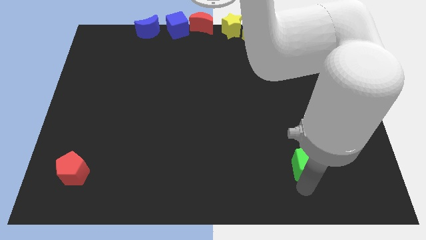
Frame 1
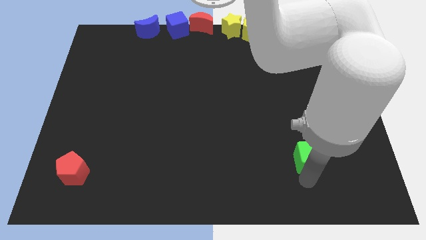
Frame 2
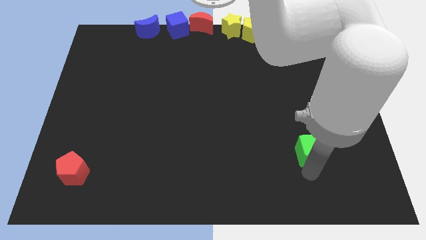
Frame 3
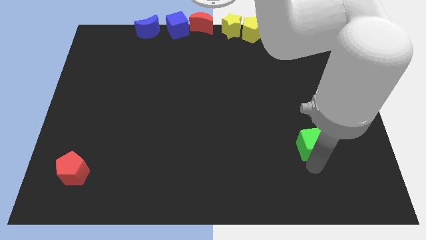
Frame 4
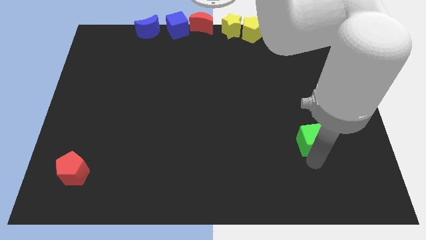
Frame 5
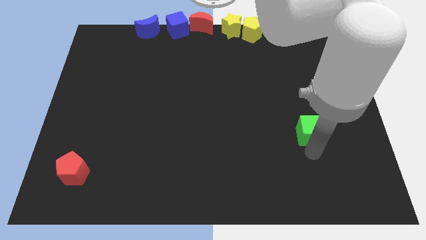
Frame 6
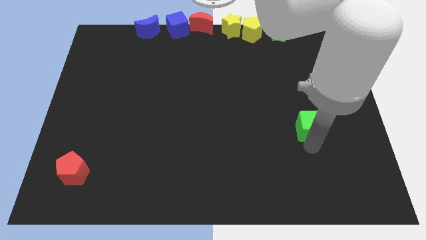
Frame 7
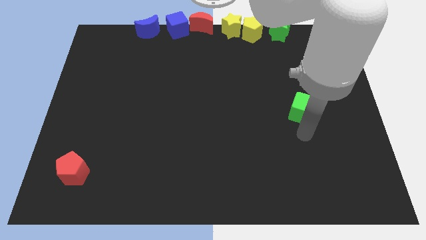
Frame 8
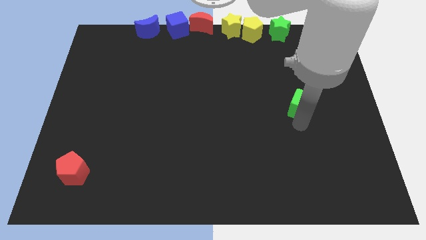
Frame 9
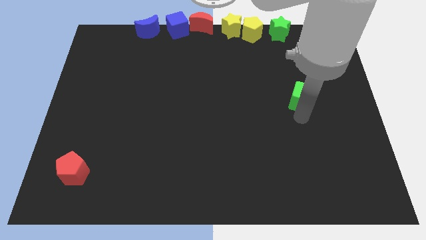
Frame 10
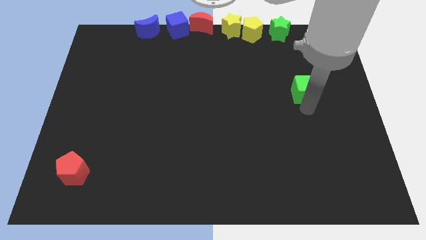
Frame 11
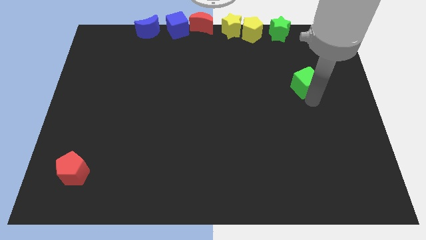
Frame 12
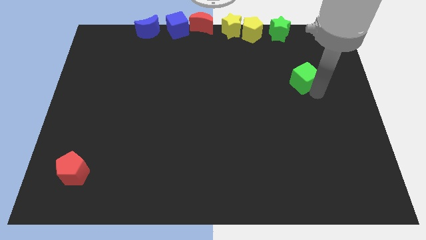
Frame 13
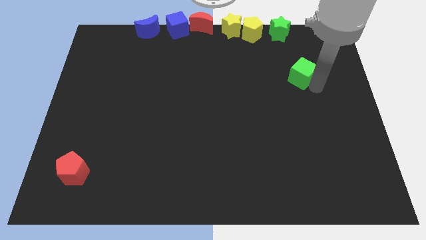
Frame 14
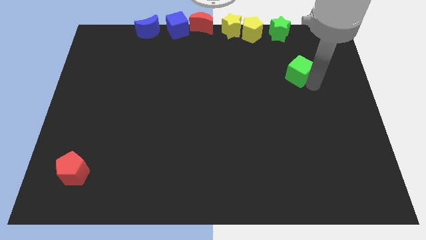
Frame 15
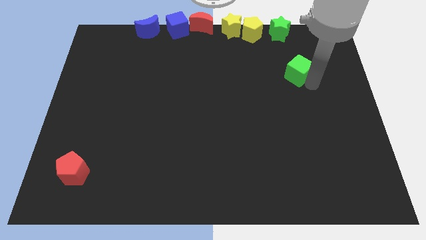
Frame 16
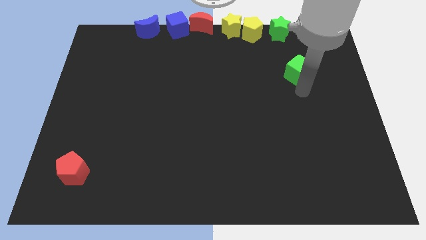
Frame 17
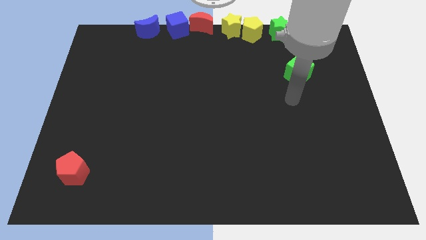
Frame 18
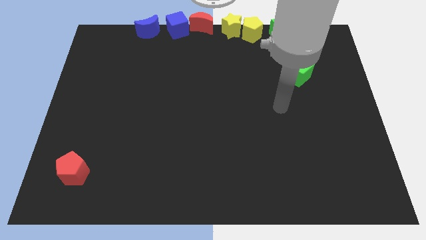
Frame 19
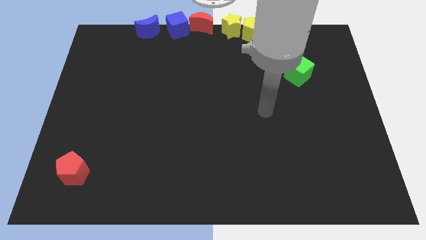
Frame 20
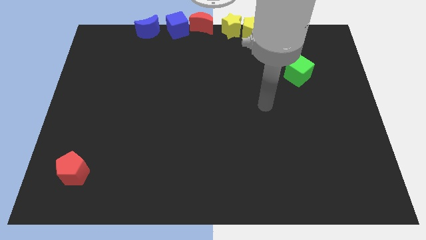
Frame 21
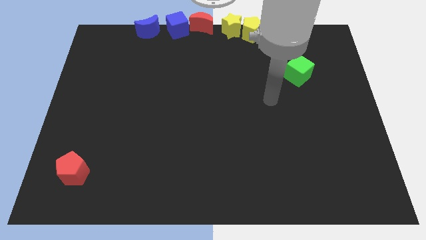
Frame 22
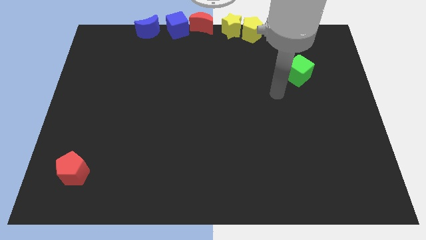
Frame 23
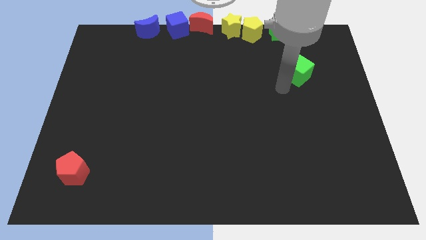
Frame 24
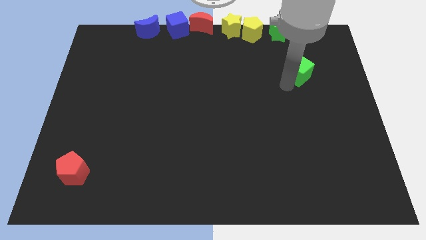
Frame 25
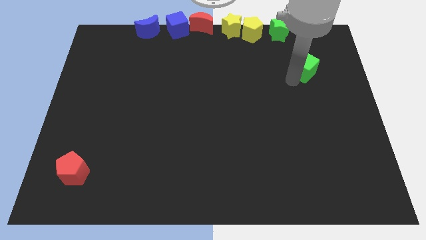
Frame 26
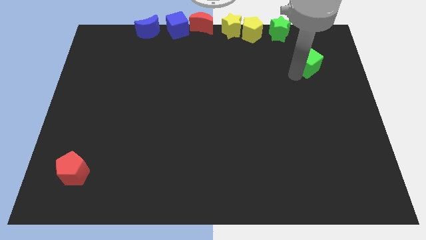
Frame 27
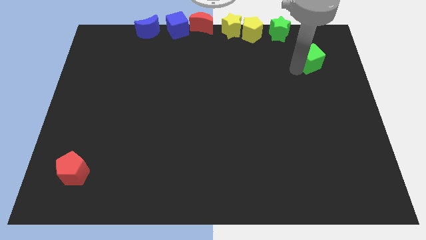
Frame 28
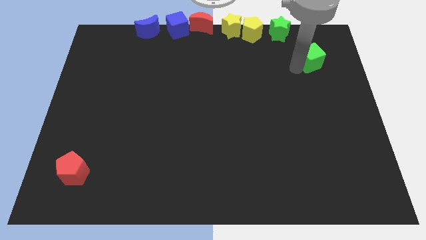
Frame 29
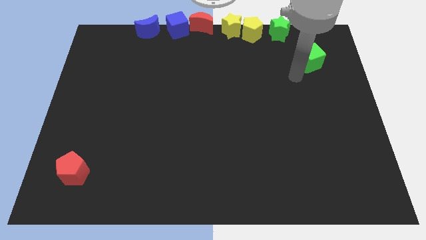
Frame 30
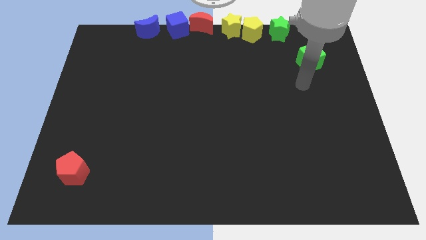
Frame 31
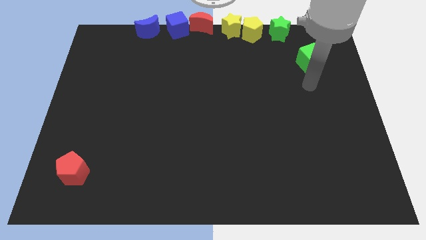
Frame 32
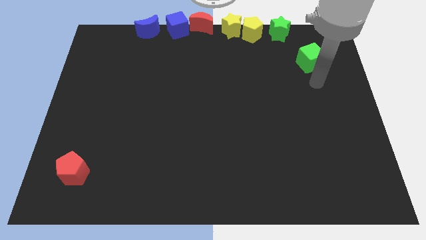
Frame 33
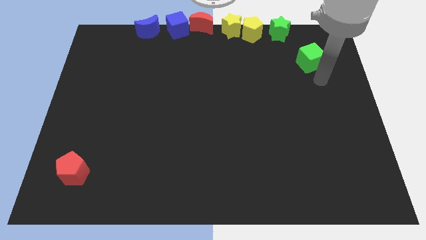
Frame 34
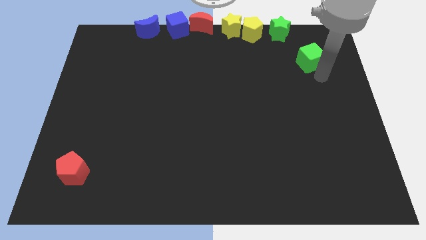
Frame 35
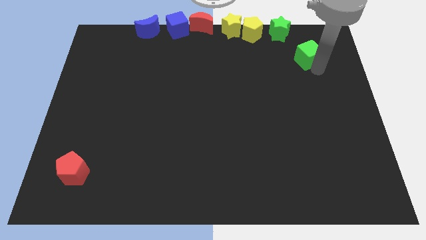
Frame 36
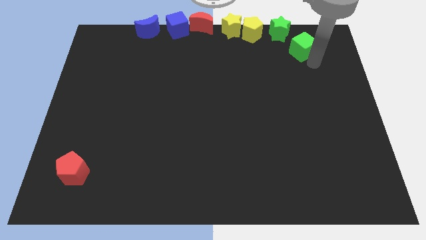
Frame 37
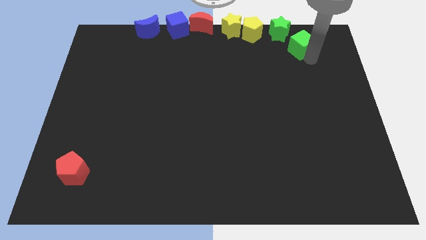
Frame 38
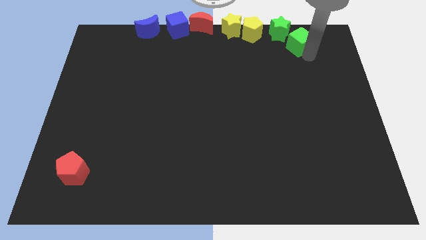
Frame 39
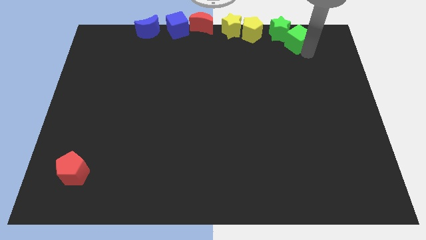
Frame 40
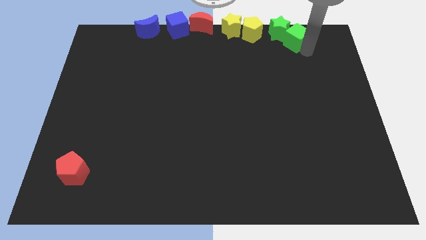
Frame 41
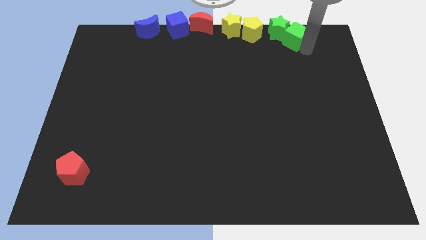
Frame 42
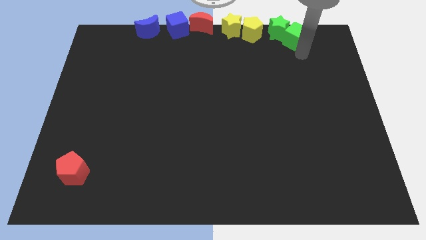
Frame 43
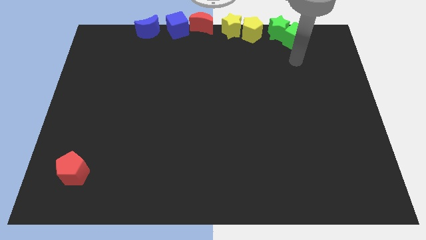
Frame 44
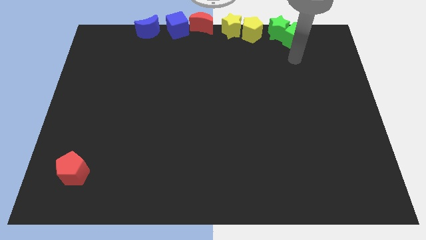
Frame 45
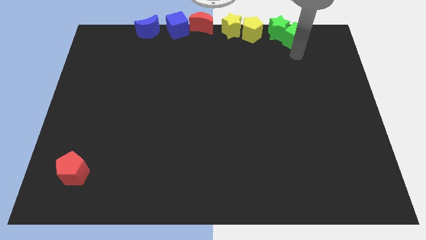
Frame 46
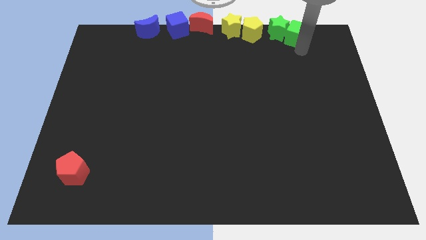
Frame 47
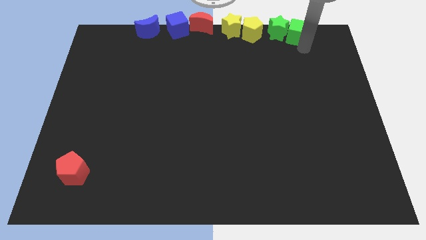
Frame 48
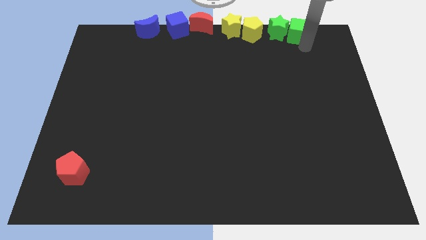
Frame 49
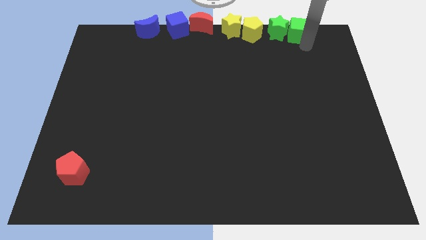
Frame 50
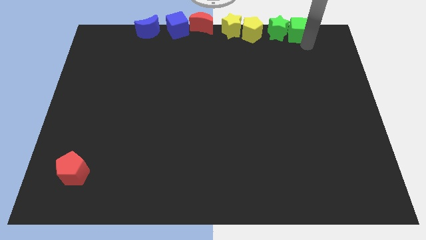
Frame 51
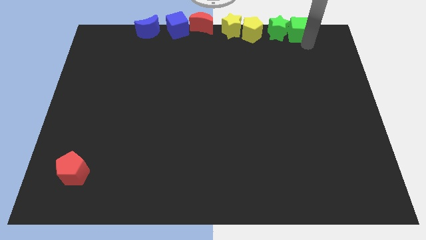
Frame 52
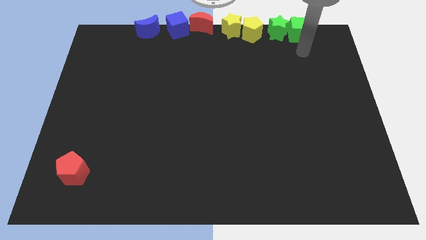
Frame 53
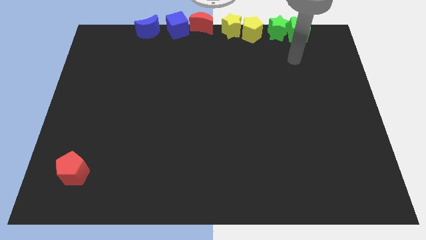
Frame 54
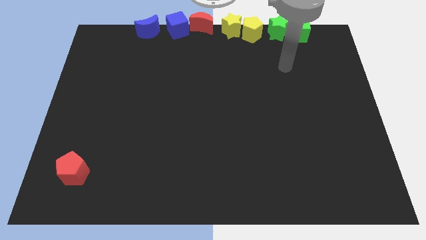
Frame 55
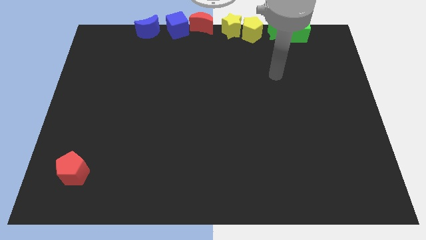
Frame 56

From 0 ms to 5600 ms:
place the green cube to the right of the green star

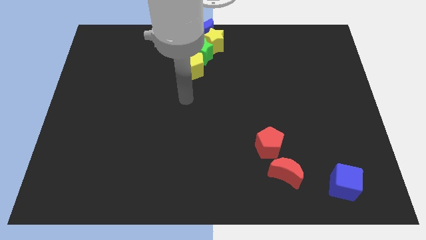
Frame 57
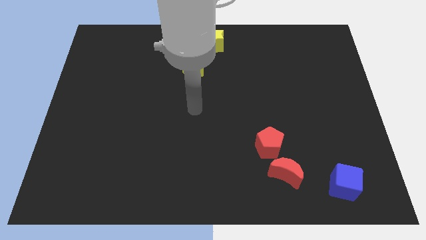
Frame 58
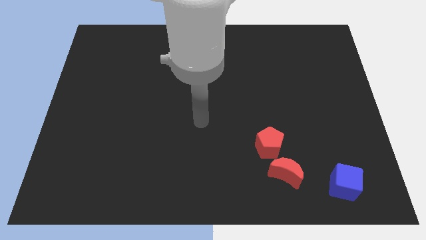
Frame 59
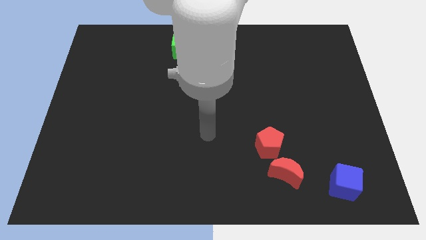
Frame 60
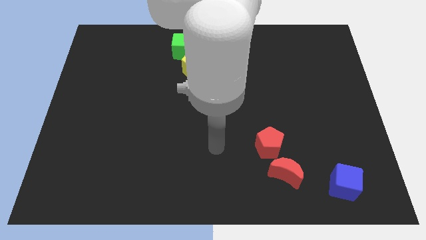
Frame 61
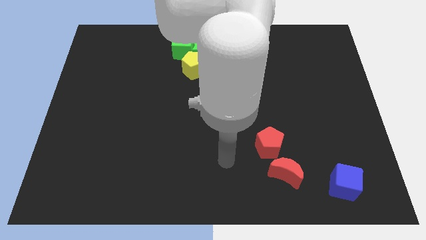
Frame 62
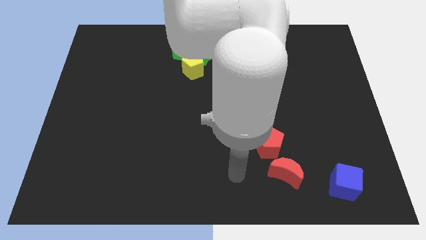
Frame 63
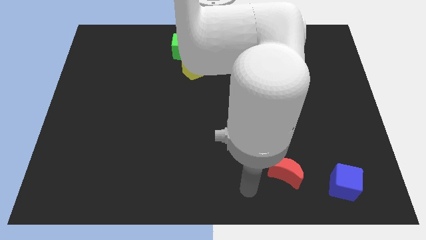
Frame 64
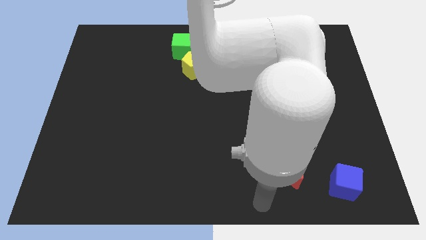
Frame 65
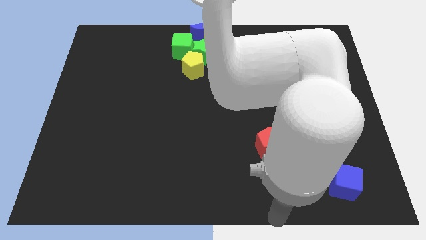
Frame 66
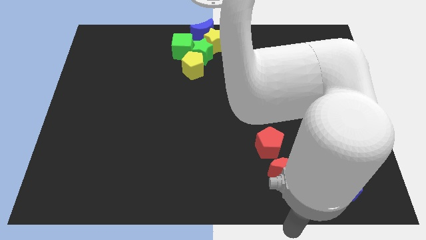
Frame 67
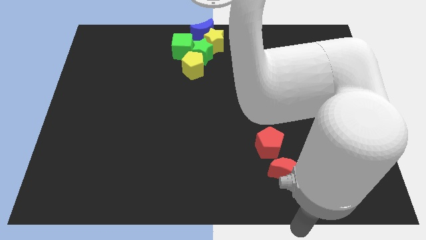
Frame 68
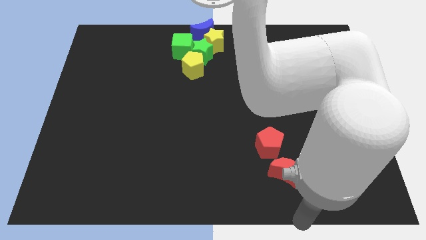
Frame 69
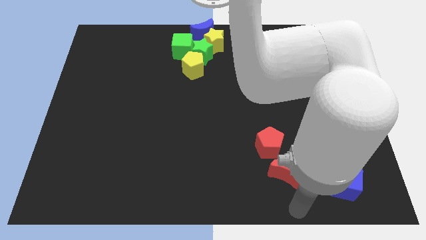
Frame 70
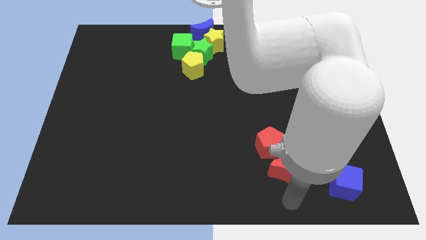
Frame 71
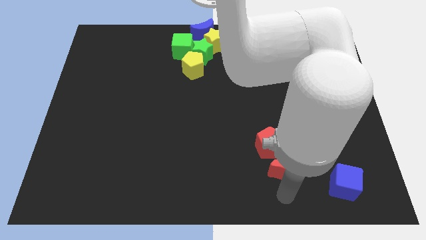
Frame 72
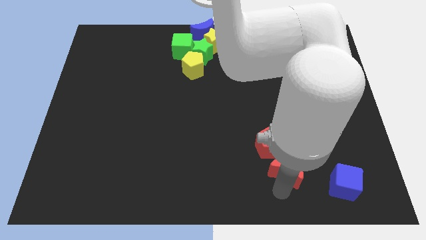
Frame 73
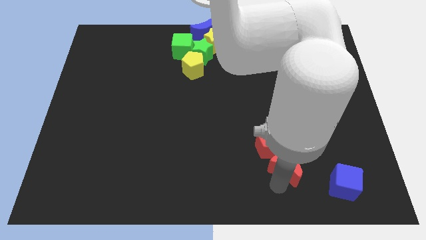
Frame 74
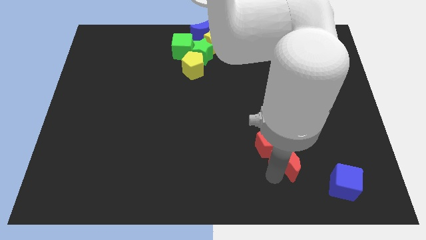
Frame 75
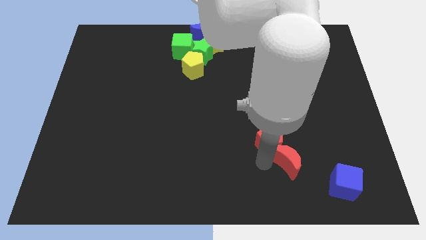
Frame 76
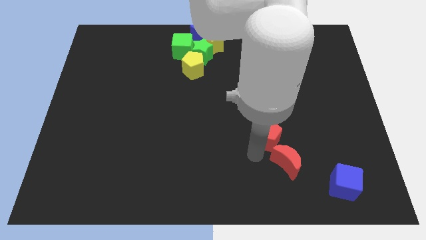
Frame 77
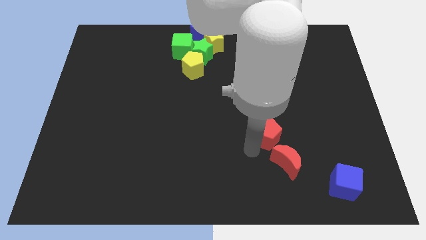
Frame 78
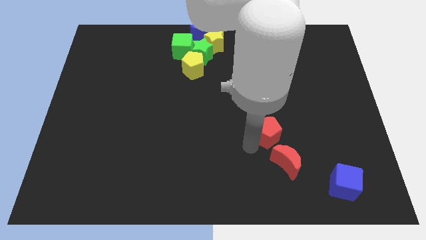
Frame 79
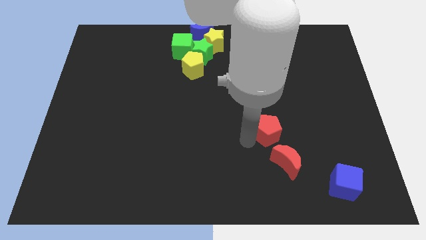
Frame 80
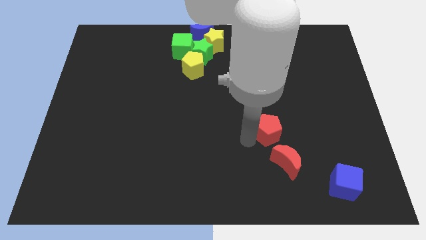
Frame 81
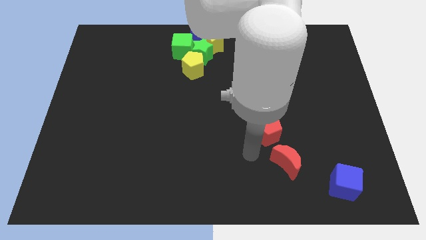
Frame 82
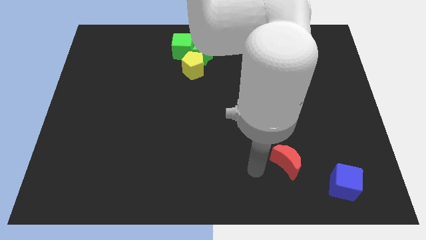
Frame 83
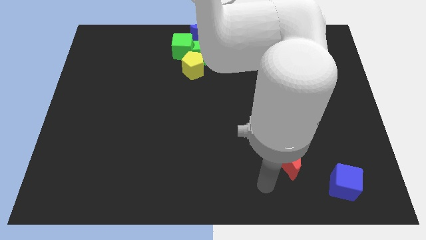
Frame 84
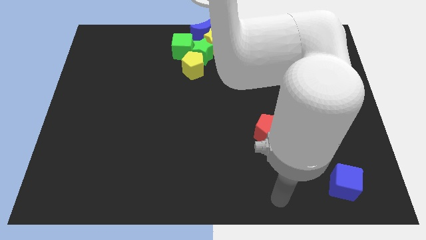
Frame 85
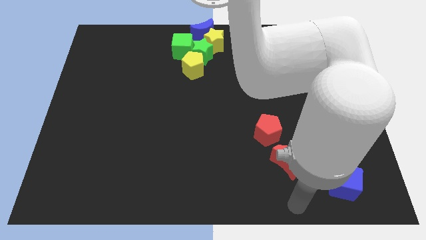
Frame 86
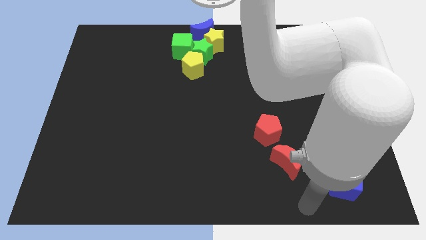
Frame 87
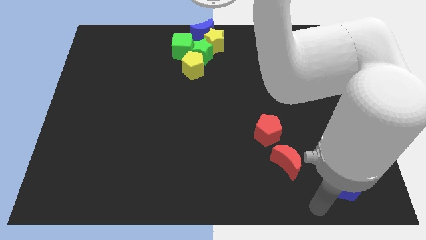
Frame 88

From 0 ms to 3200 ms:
separate red crescent and the red pentagon
